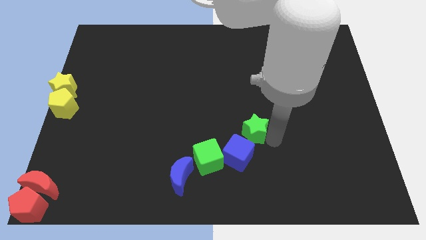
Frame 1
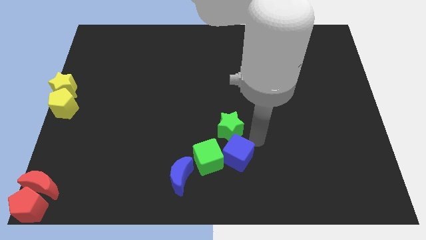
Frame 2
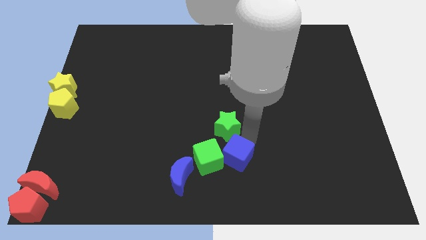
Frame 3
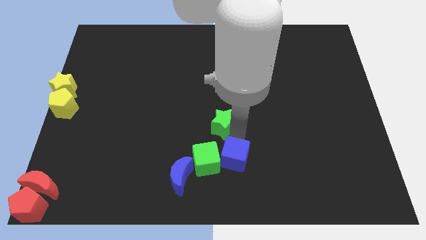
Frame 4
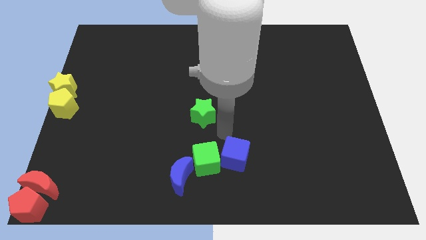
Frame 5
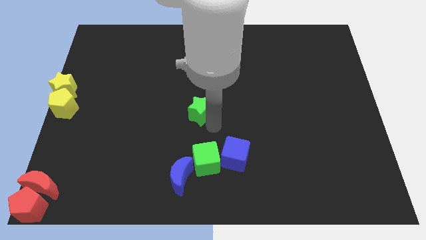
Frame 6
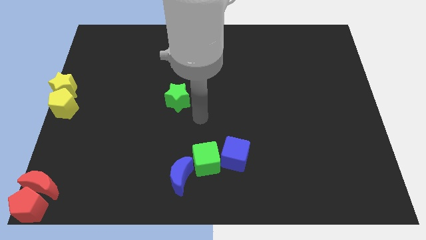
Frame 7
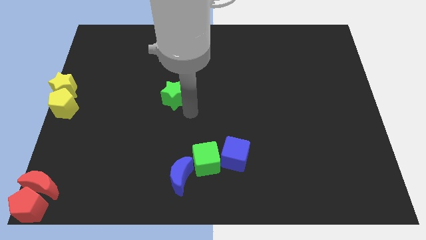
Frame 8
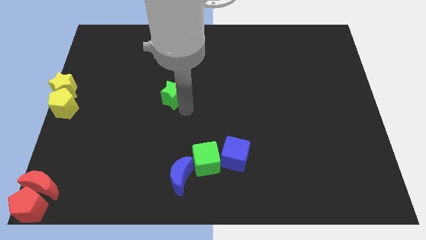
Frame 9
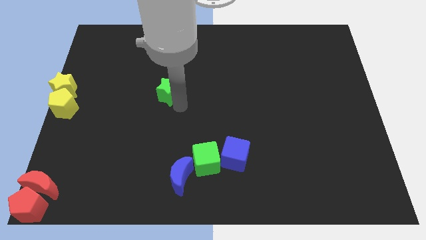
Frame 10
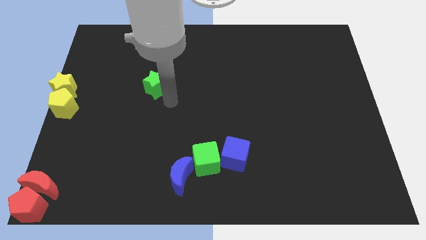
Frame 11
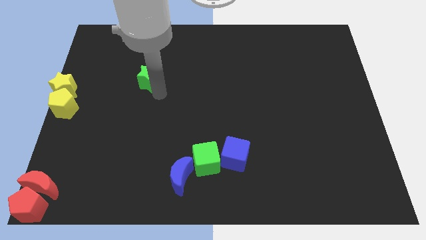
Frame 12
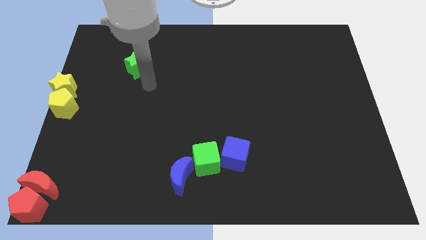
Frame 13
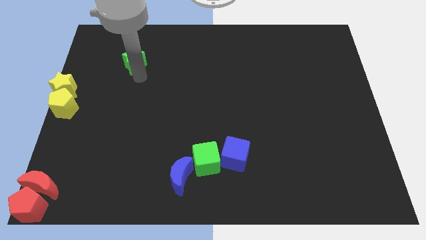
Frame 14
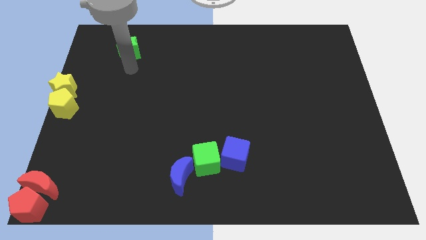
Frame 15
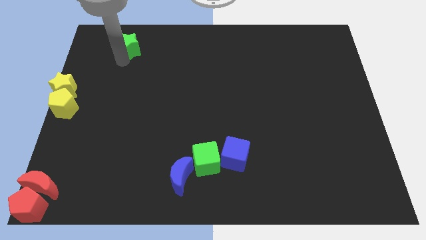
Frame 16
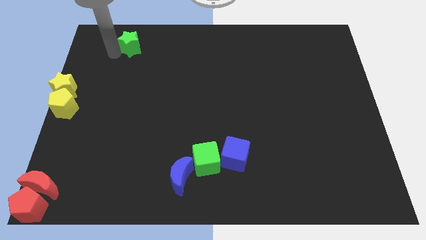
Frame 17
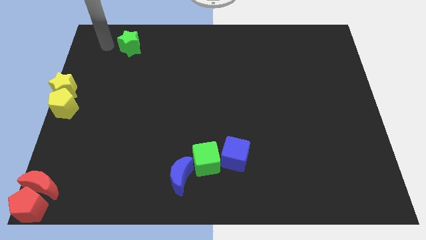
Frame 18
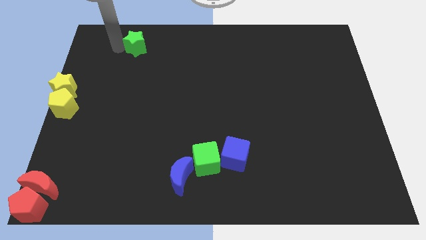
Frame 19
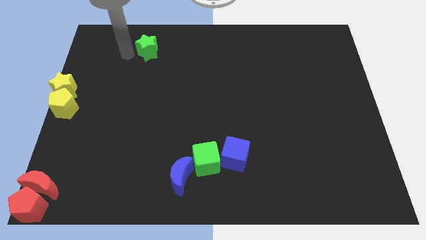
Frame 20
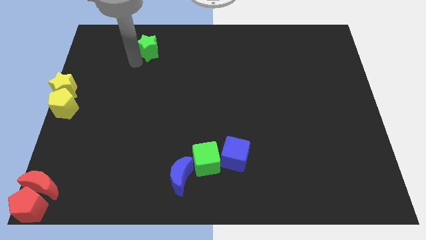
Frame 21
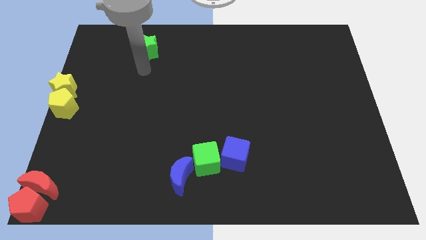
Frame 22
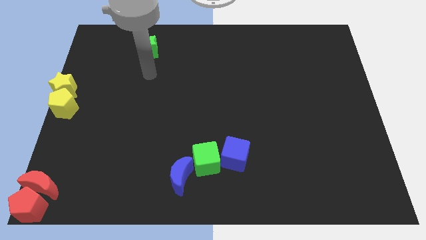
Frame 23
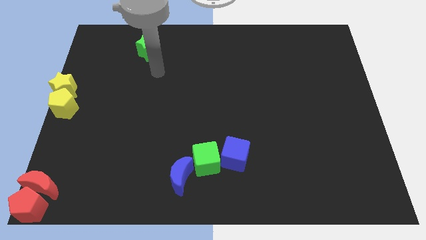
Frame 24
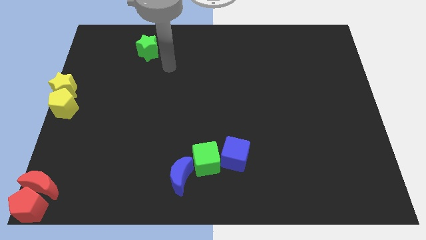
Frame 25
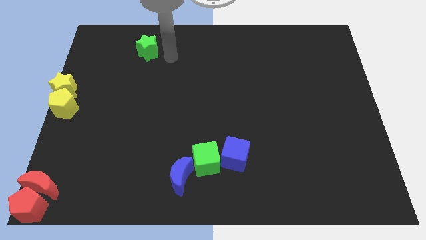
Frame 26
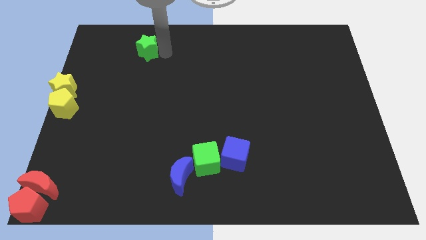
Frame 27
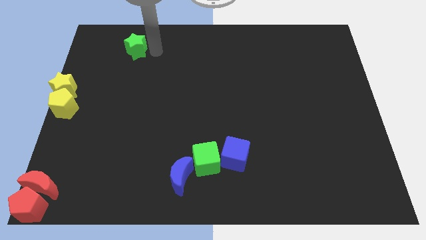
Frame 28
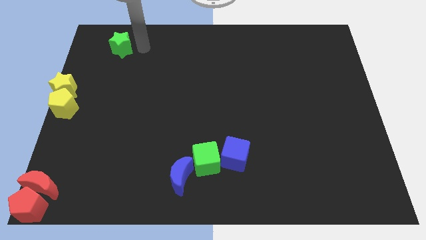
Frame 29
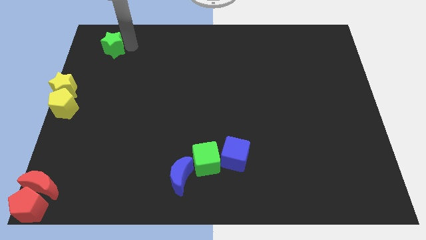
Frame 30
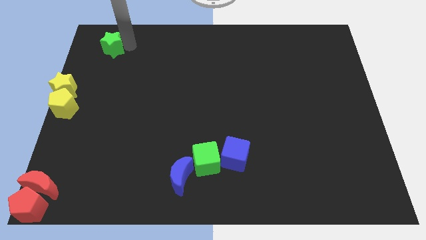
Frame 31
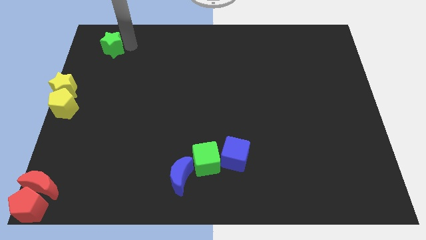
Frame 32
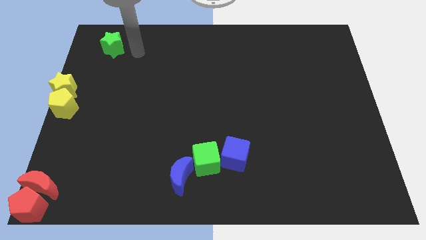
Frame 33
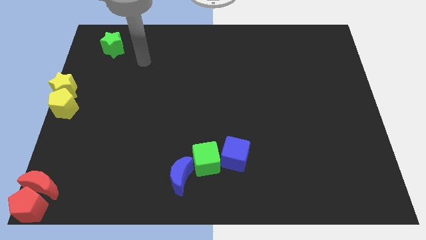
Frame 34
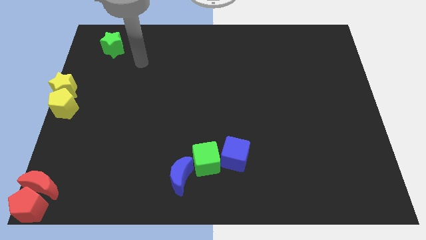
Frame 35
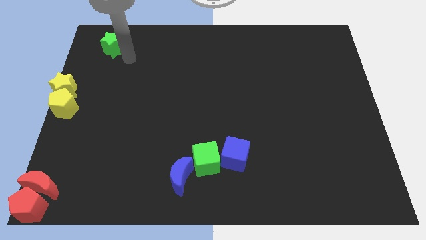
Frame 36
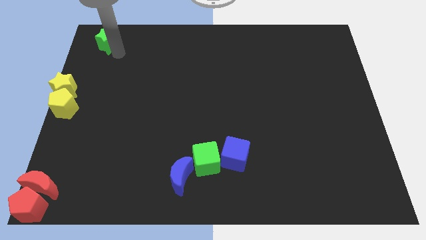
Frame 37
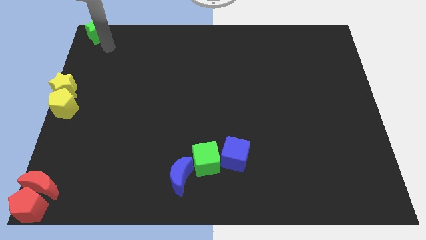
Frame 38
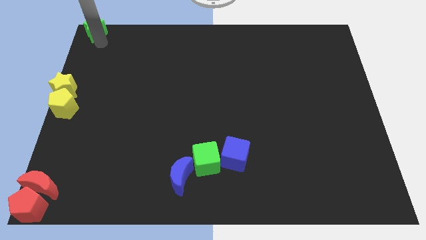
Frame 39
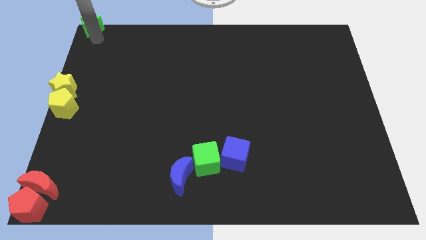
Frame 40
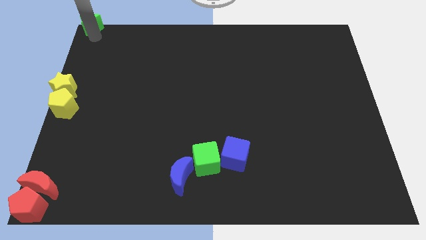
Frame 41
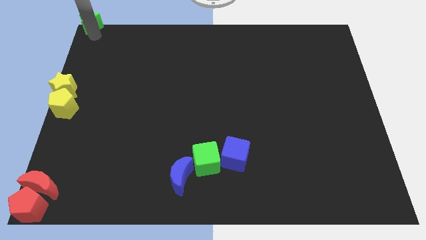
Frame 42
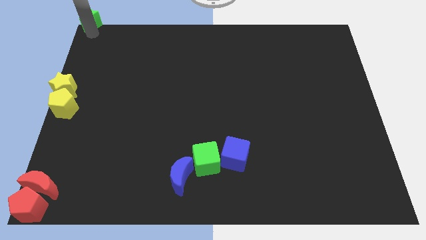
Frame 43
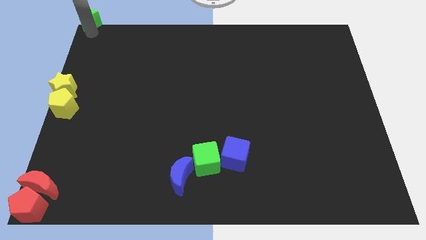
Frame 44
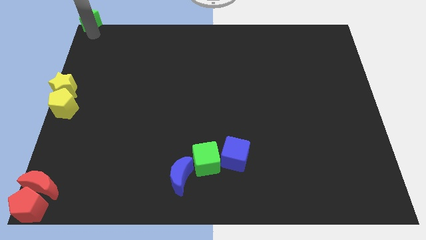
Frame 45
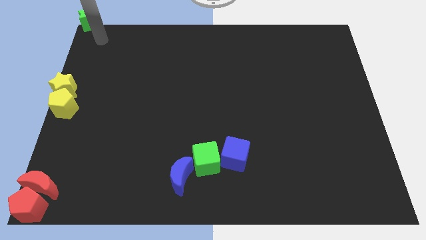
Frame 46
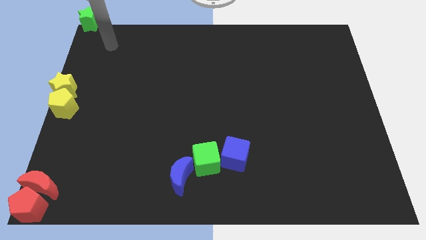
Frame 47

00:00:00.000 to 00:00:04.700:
push the green star to the top left side of the board

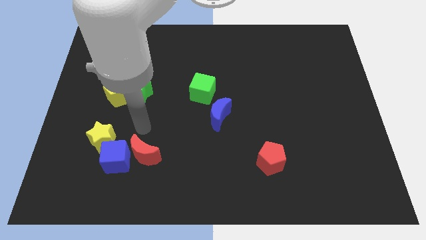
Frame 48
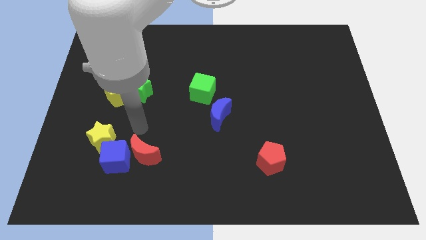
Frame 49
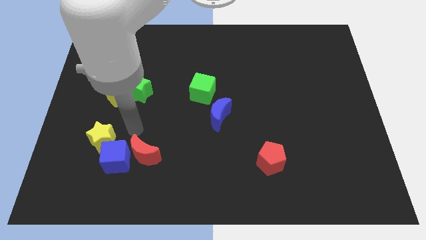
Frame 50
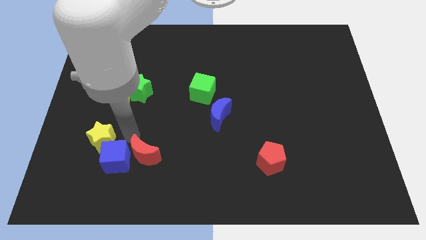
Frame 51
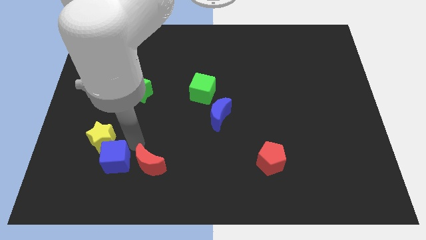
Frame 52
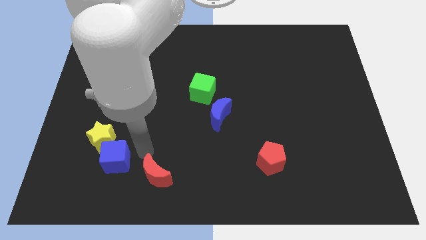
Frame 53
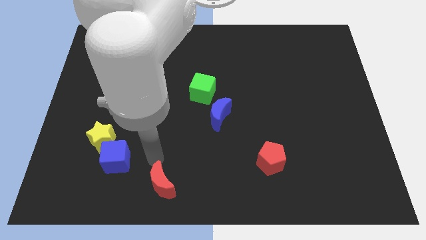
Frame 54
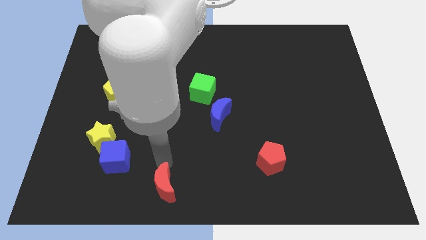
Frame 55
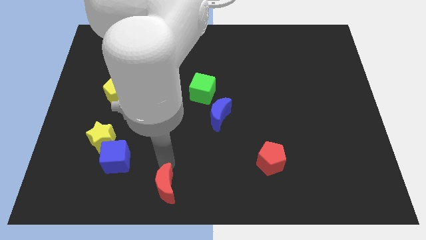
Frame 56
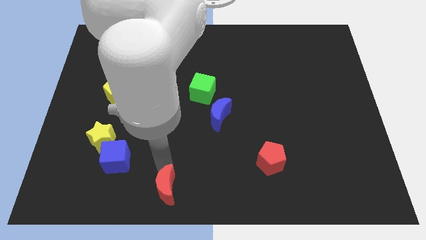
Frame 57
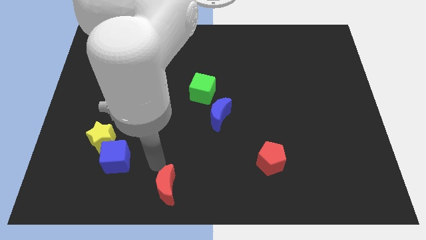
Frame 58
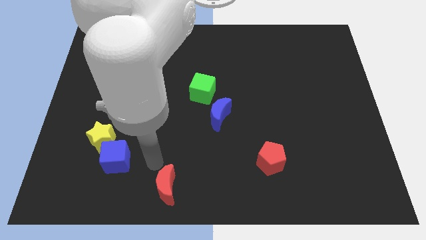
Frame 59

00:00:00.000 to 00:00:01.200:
separate the red crescent from the blue cube

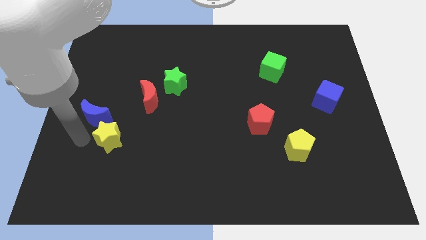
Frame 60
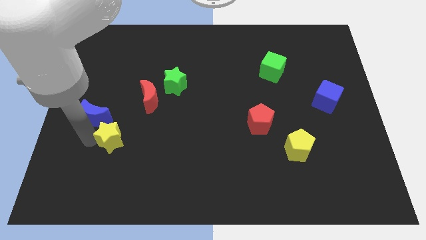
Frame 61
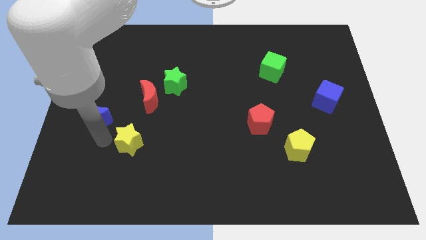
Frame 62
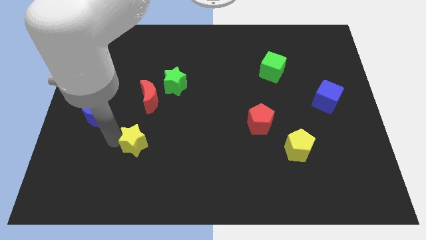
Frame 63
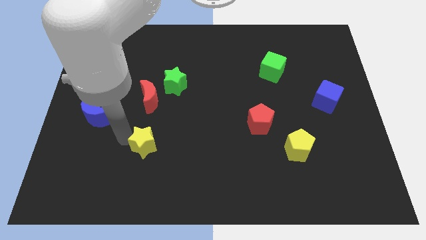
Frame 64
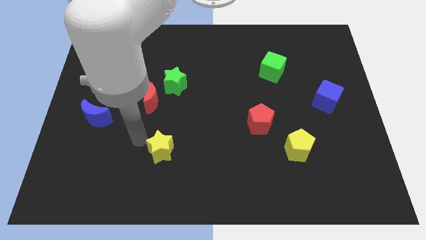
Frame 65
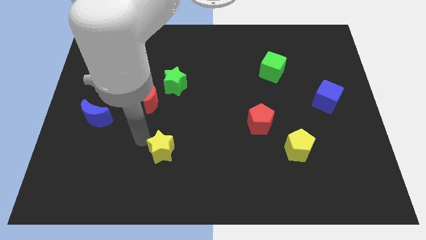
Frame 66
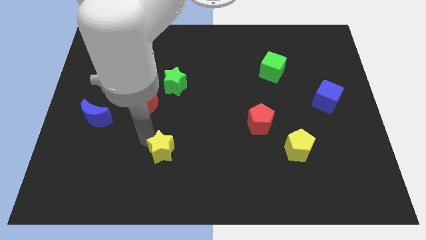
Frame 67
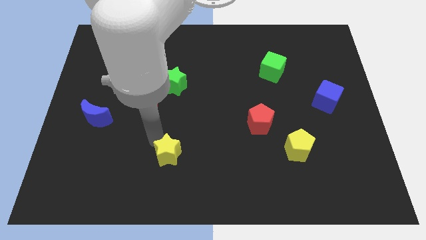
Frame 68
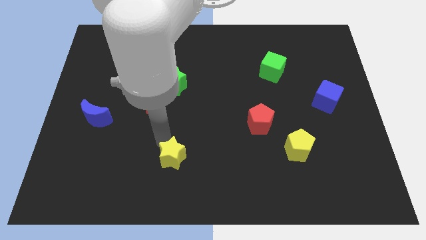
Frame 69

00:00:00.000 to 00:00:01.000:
push the yellow star below the green star

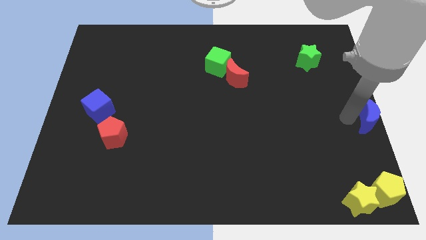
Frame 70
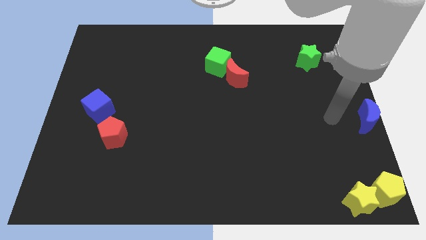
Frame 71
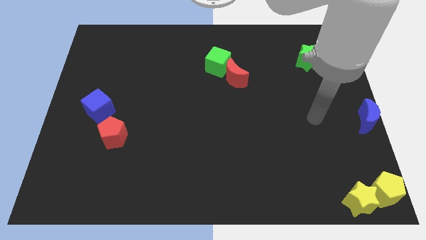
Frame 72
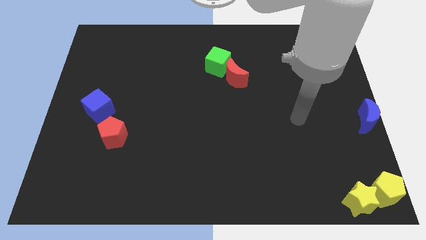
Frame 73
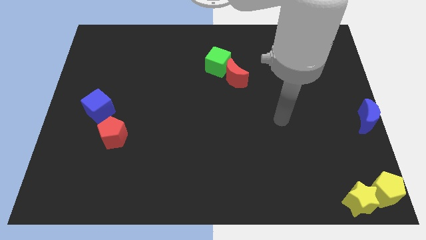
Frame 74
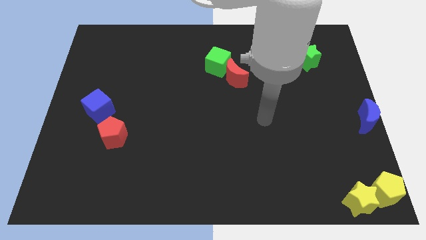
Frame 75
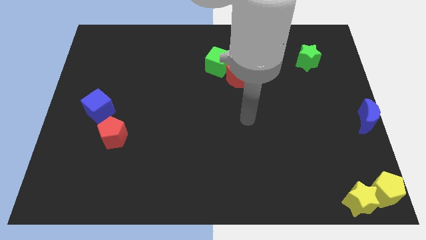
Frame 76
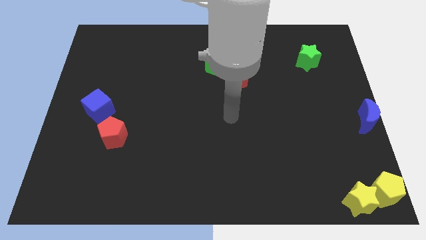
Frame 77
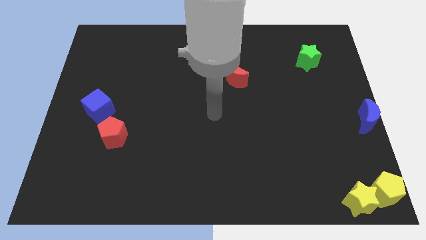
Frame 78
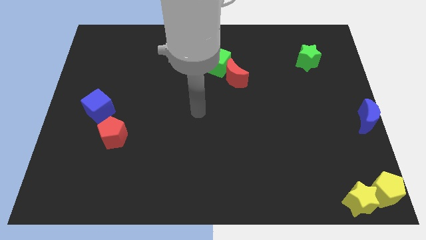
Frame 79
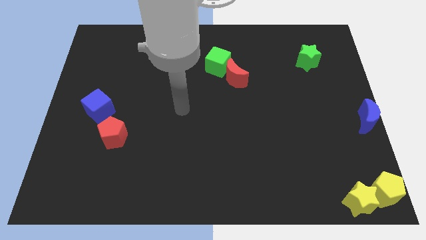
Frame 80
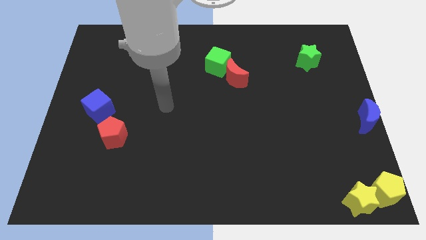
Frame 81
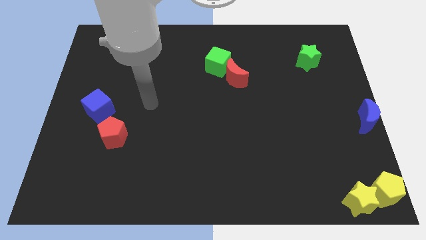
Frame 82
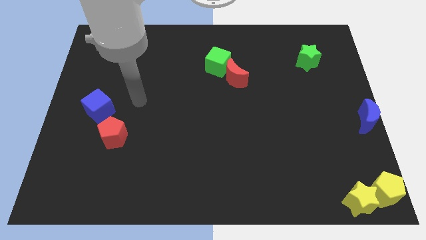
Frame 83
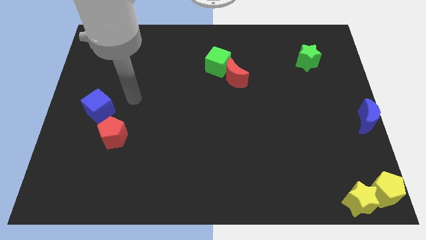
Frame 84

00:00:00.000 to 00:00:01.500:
go away from the blue moon

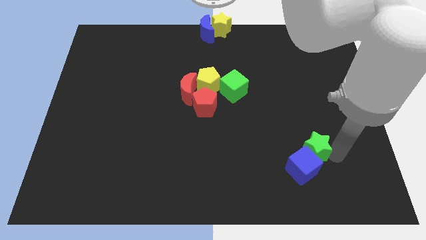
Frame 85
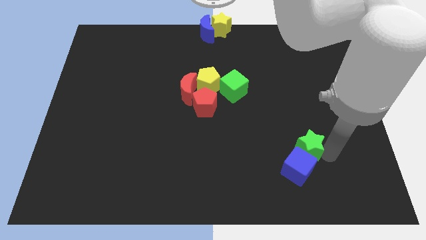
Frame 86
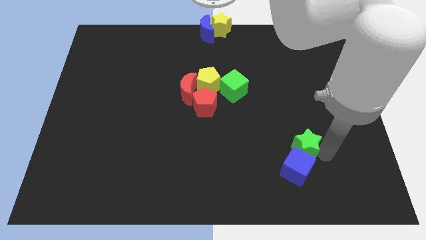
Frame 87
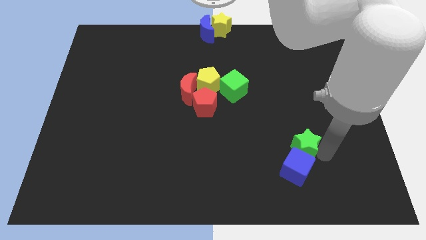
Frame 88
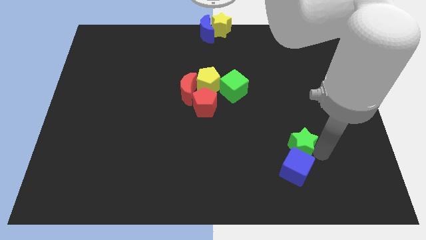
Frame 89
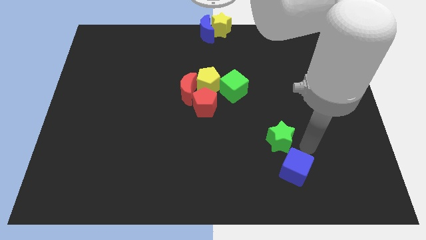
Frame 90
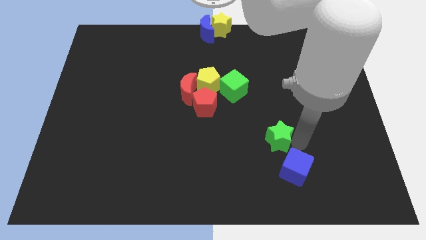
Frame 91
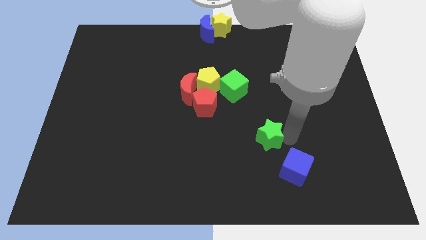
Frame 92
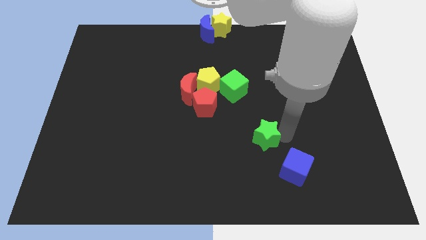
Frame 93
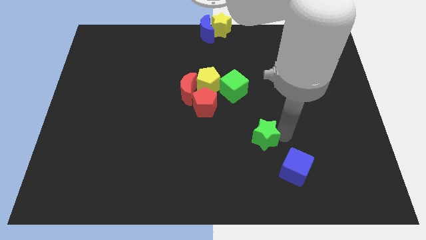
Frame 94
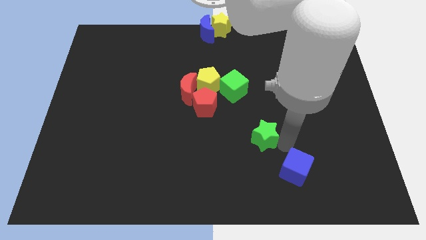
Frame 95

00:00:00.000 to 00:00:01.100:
separate green star and blue cube
